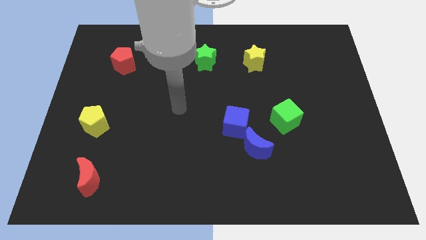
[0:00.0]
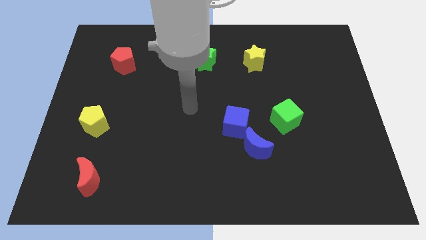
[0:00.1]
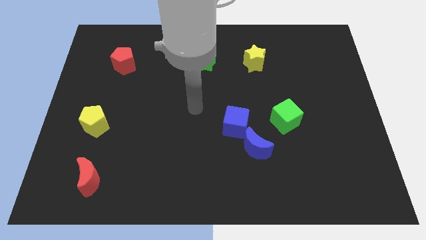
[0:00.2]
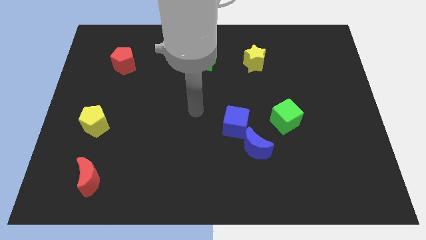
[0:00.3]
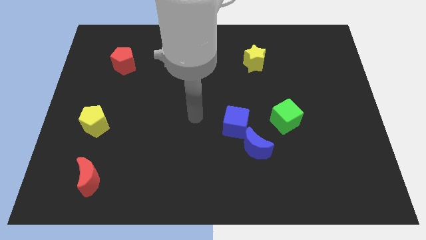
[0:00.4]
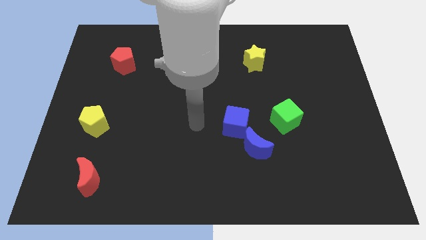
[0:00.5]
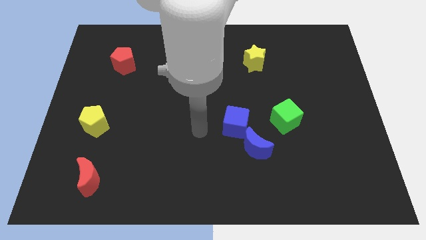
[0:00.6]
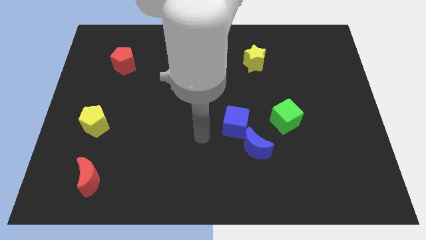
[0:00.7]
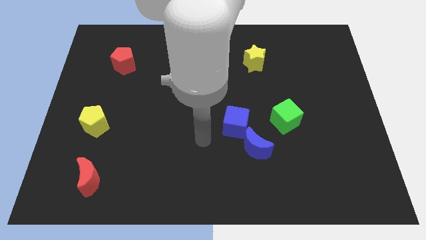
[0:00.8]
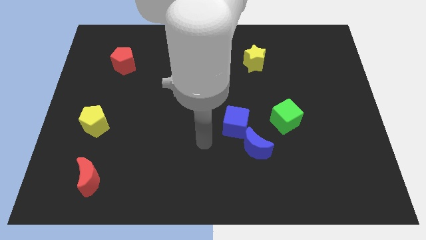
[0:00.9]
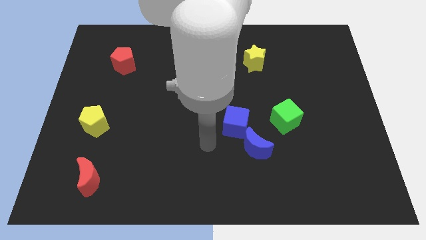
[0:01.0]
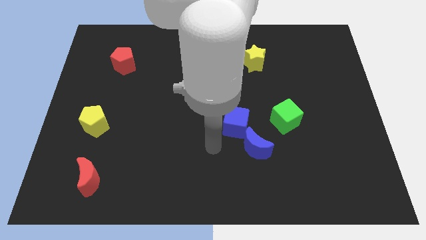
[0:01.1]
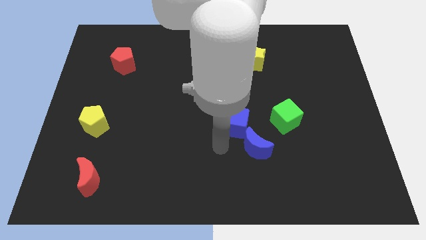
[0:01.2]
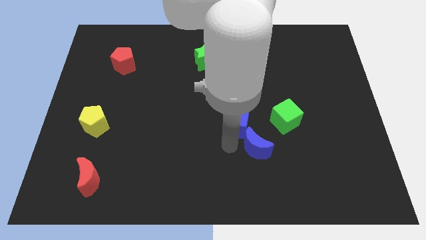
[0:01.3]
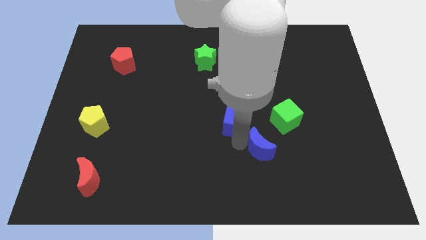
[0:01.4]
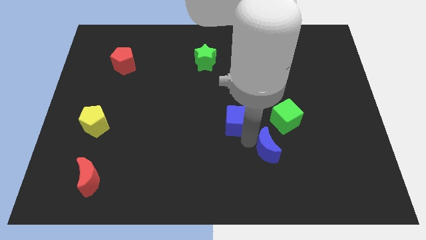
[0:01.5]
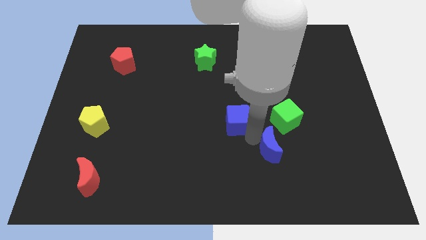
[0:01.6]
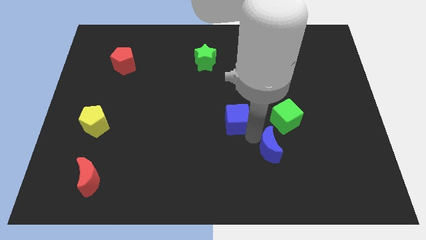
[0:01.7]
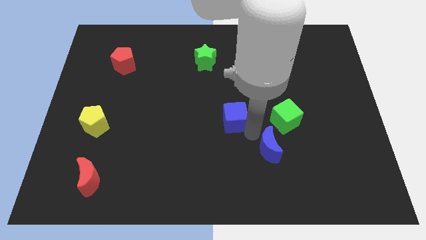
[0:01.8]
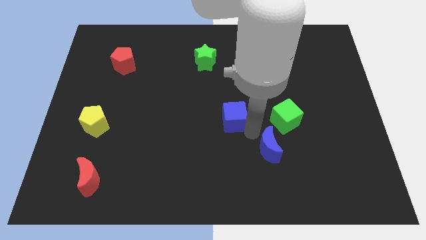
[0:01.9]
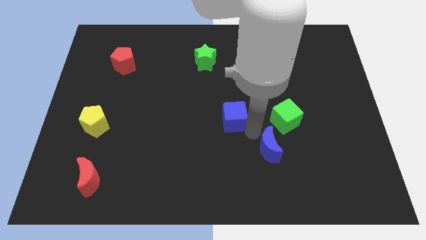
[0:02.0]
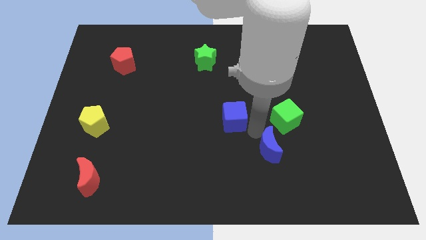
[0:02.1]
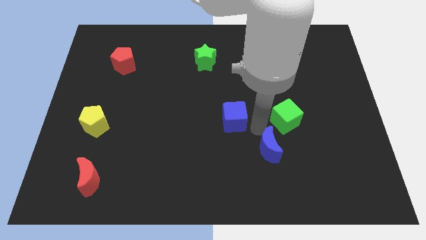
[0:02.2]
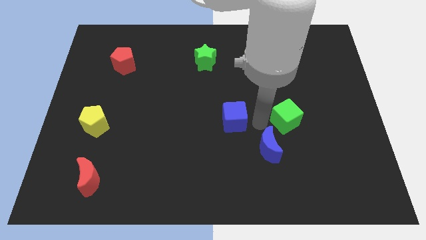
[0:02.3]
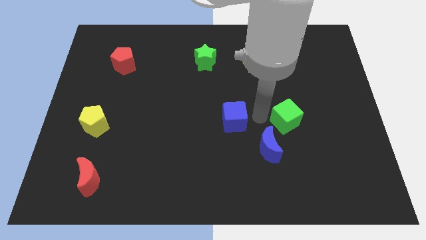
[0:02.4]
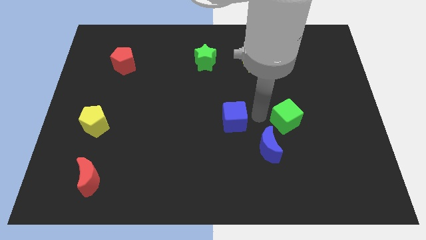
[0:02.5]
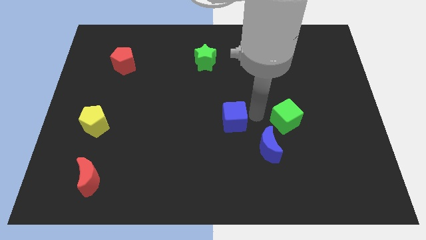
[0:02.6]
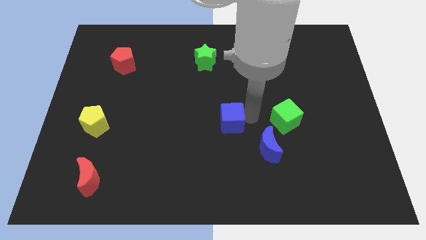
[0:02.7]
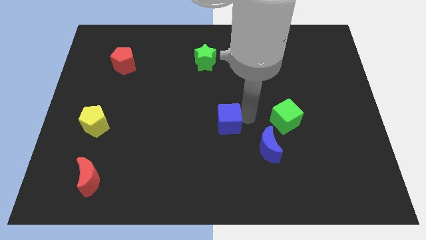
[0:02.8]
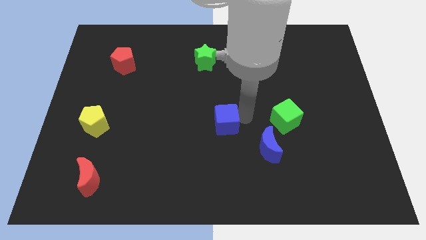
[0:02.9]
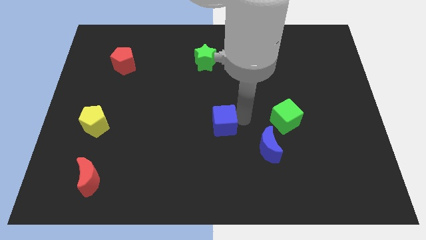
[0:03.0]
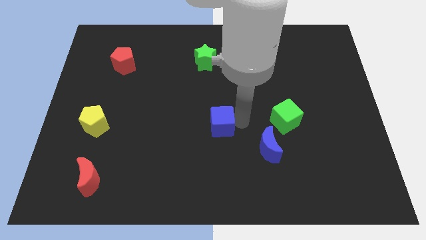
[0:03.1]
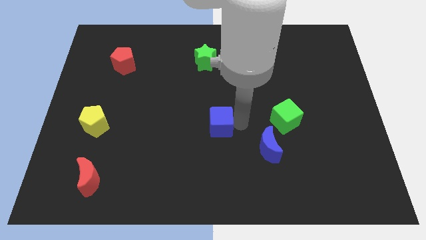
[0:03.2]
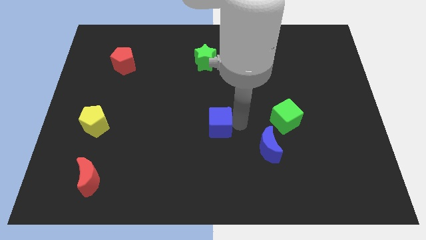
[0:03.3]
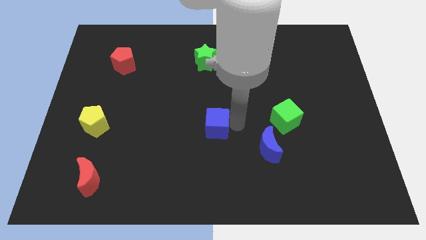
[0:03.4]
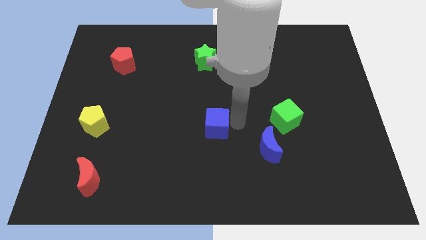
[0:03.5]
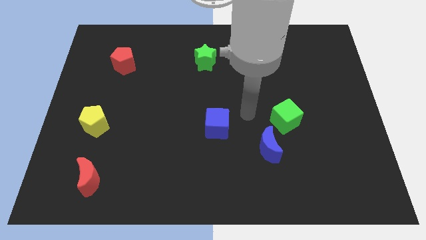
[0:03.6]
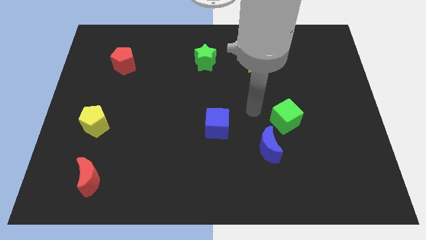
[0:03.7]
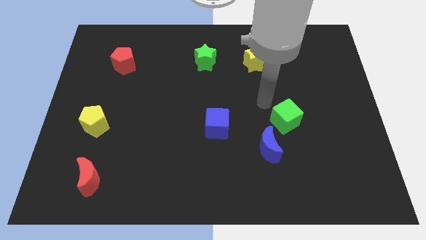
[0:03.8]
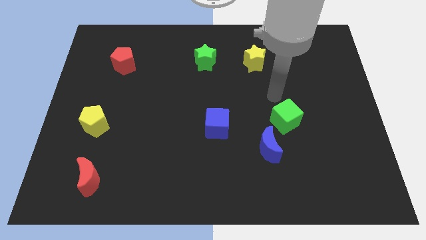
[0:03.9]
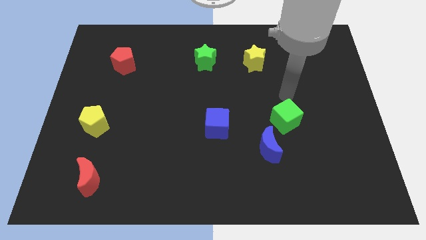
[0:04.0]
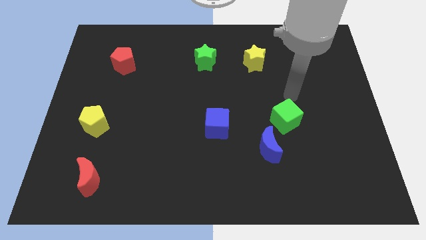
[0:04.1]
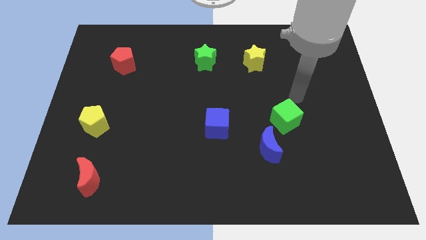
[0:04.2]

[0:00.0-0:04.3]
push the blue cube vertical below the green star

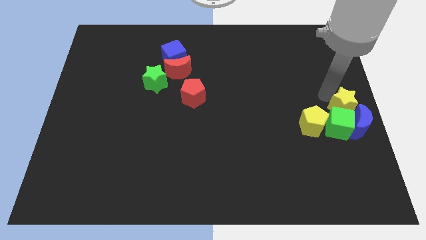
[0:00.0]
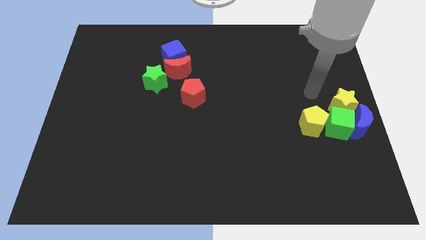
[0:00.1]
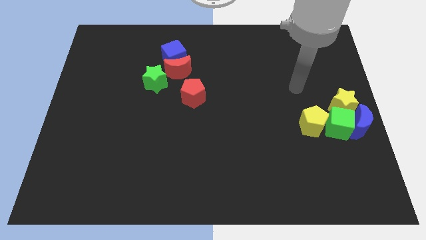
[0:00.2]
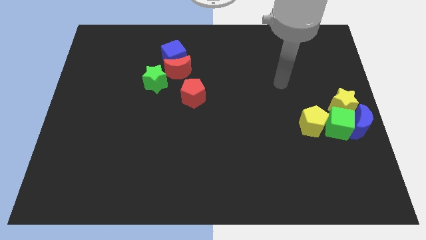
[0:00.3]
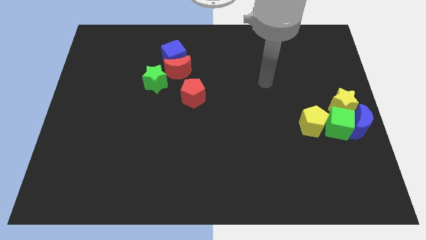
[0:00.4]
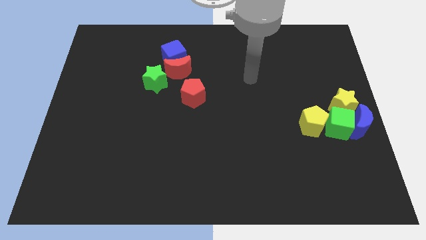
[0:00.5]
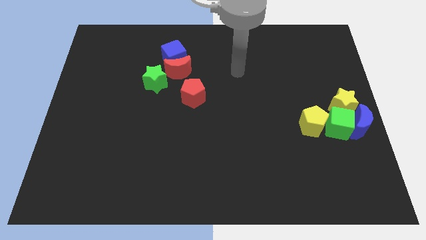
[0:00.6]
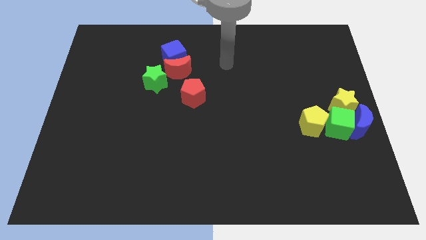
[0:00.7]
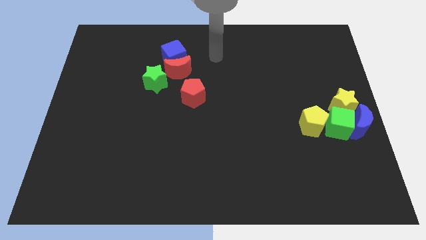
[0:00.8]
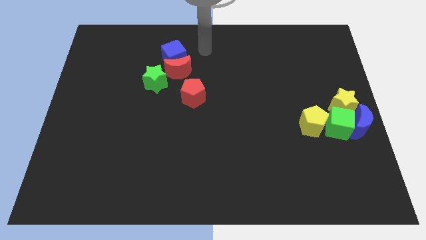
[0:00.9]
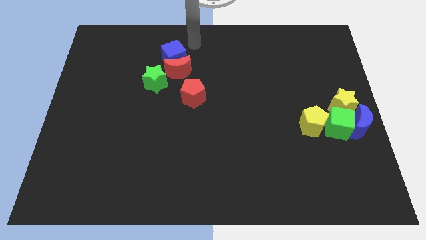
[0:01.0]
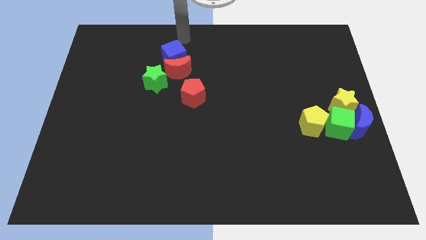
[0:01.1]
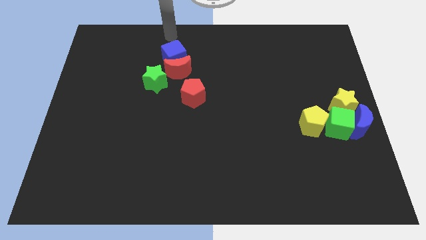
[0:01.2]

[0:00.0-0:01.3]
go away from the group of blocks

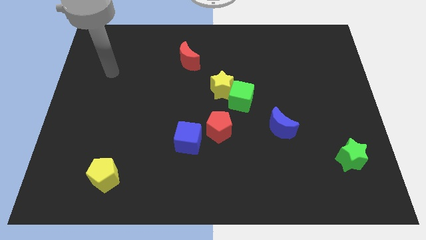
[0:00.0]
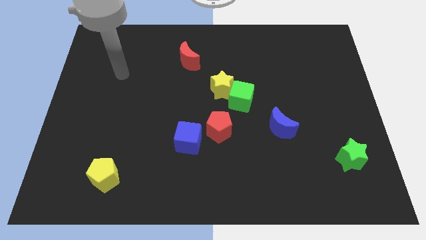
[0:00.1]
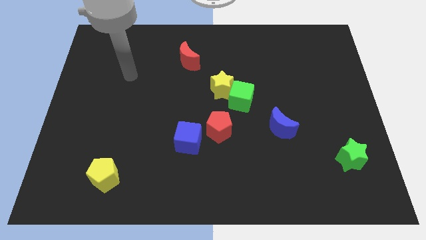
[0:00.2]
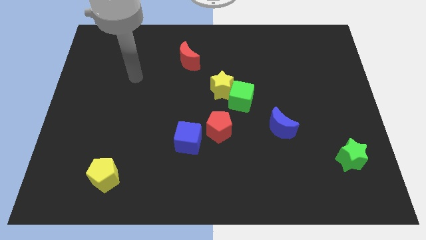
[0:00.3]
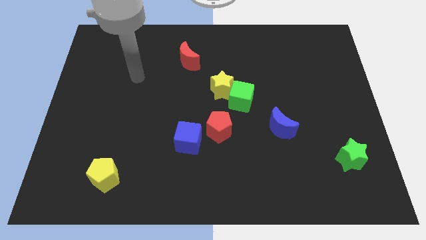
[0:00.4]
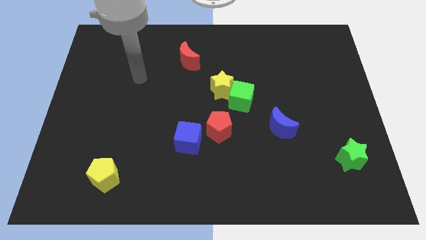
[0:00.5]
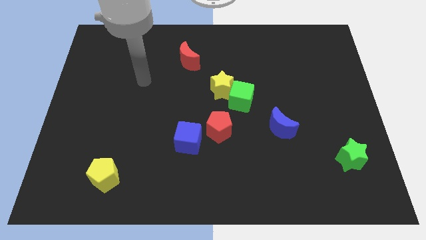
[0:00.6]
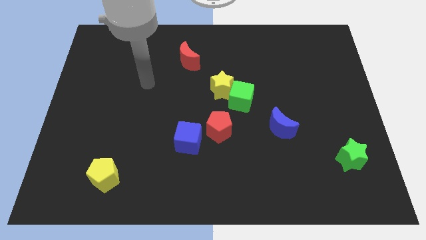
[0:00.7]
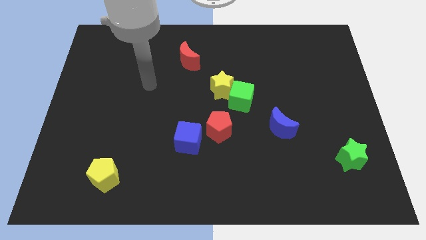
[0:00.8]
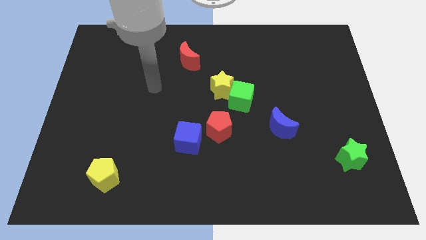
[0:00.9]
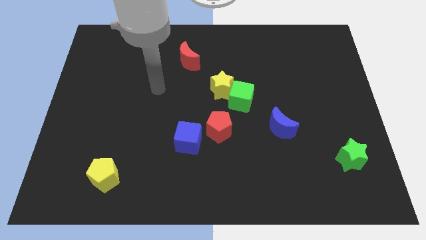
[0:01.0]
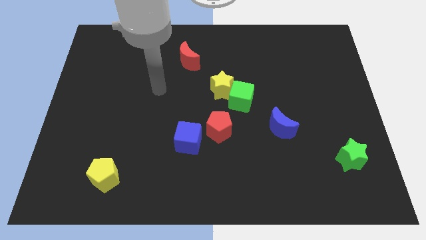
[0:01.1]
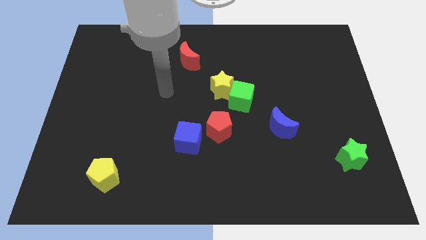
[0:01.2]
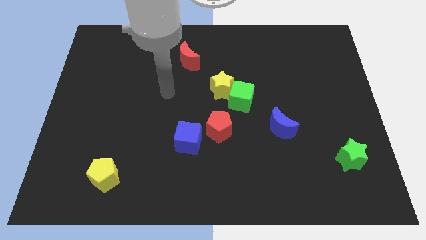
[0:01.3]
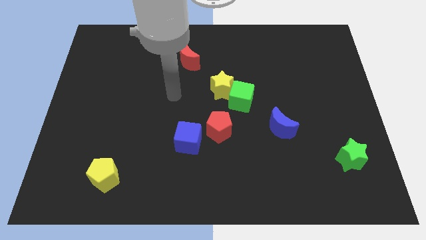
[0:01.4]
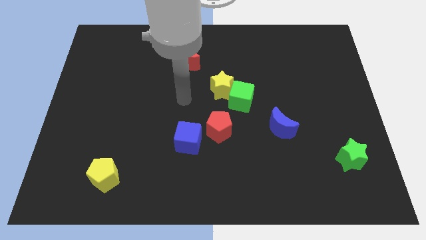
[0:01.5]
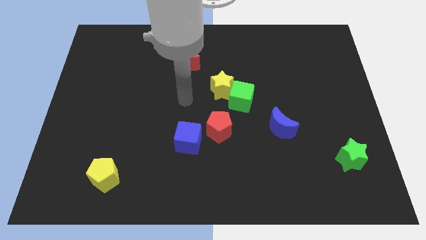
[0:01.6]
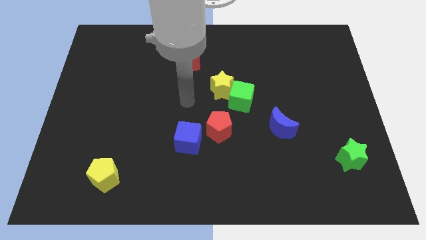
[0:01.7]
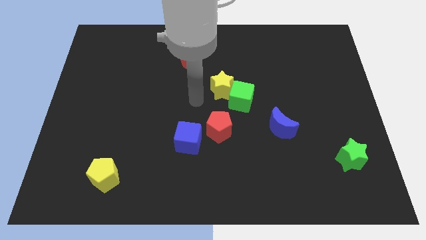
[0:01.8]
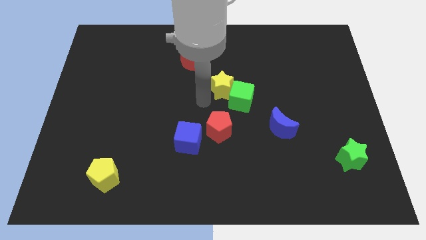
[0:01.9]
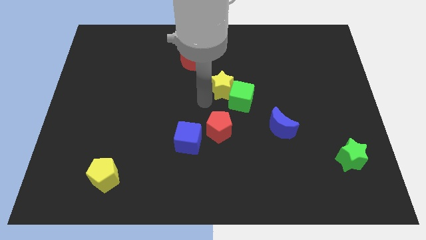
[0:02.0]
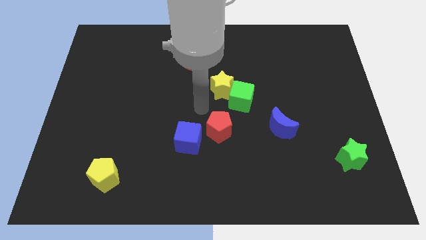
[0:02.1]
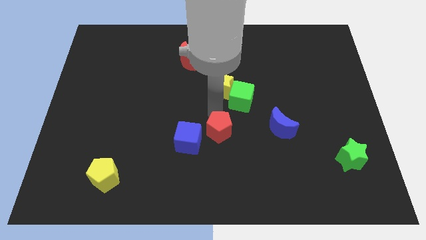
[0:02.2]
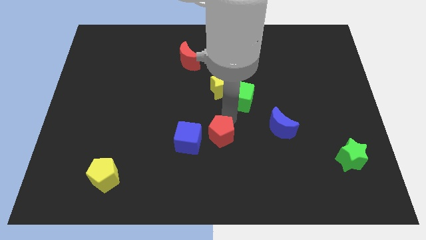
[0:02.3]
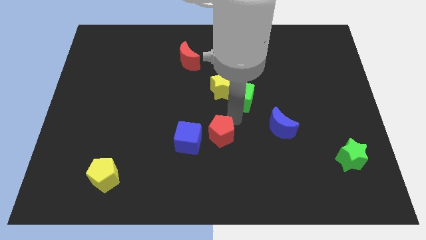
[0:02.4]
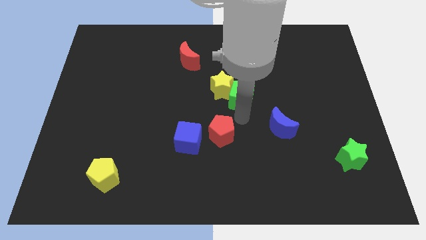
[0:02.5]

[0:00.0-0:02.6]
go and tap the red pentagon

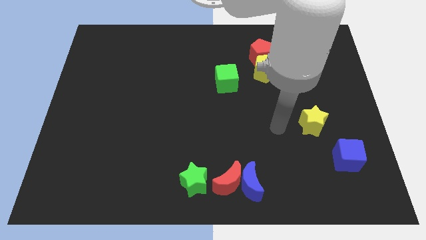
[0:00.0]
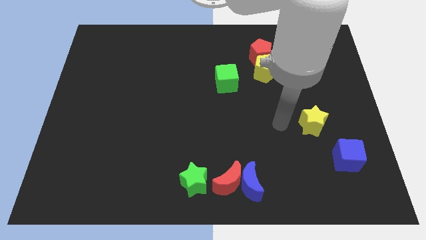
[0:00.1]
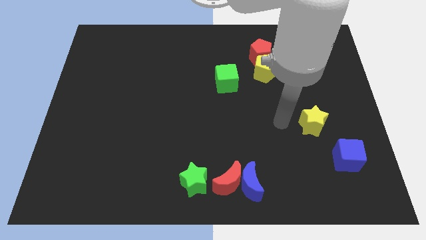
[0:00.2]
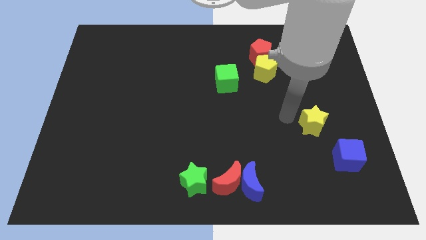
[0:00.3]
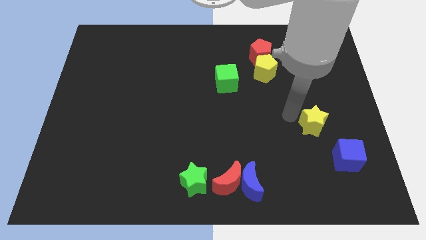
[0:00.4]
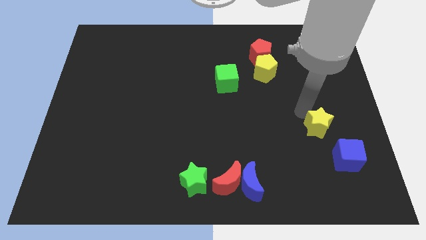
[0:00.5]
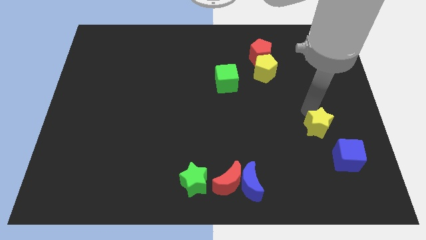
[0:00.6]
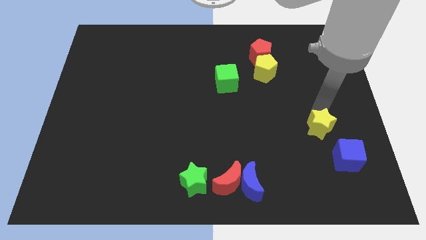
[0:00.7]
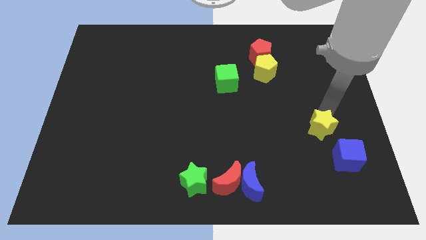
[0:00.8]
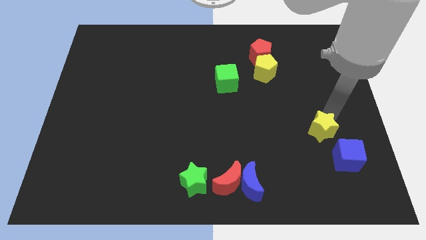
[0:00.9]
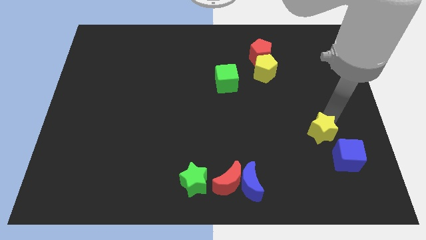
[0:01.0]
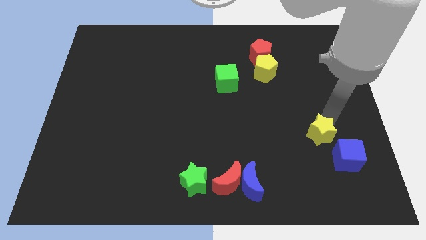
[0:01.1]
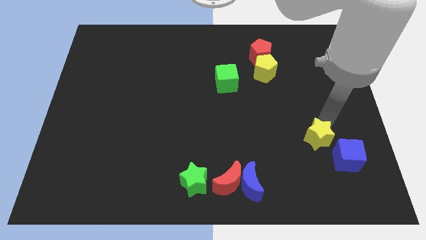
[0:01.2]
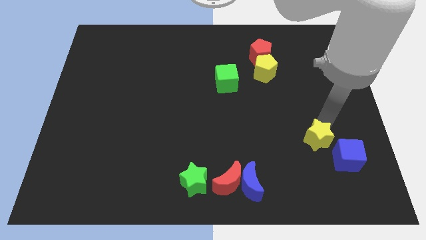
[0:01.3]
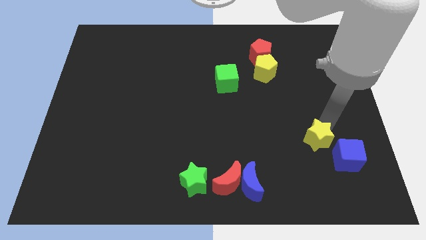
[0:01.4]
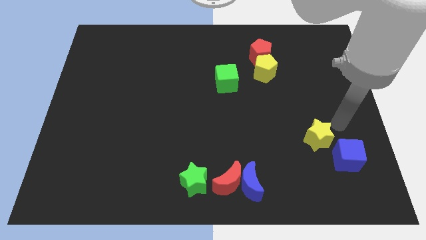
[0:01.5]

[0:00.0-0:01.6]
move the yellow star close to the blue cube
